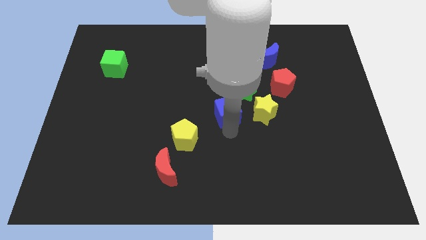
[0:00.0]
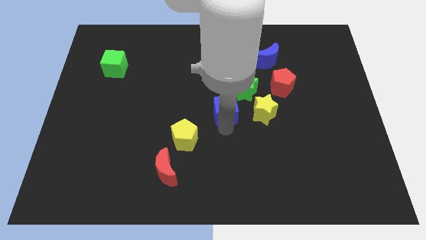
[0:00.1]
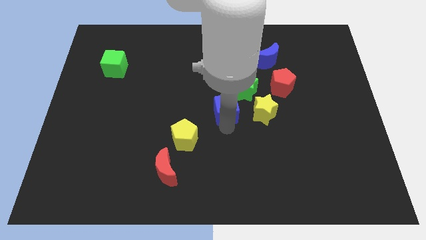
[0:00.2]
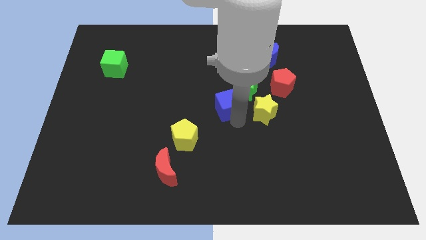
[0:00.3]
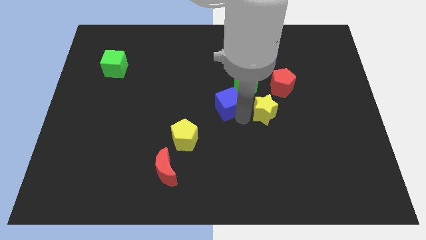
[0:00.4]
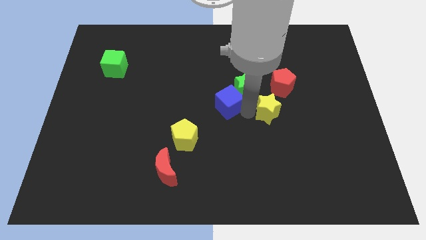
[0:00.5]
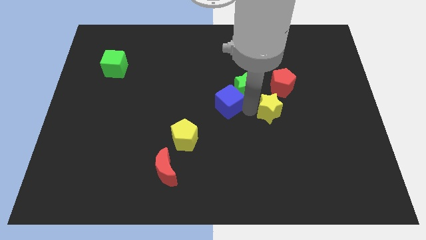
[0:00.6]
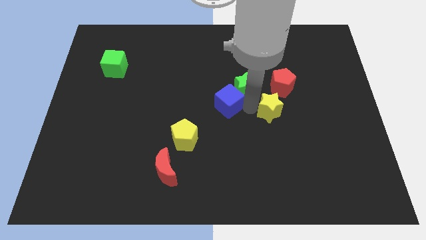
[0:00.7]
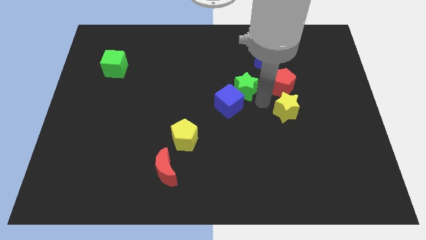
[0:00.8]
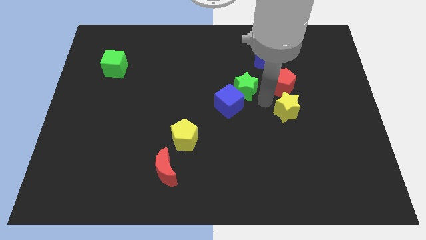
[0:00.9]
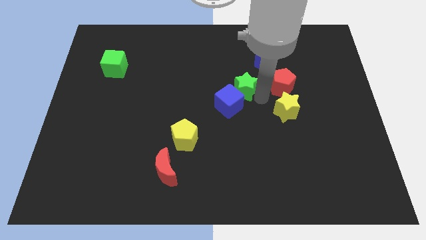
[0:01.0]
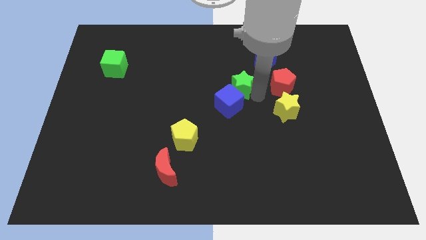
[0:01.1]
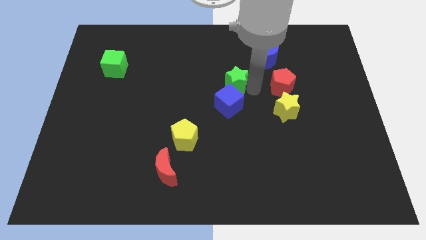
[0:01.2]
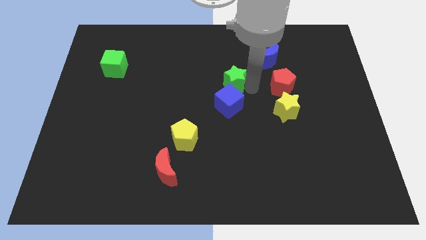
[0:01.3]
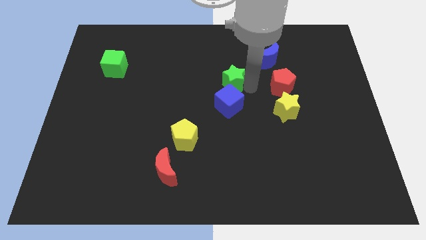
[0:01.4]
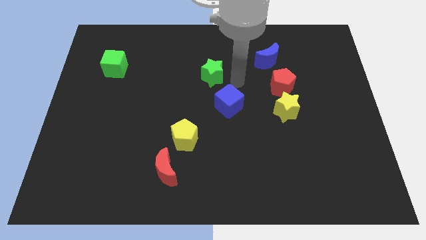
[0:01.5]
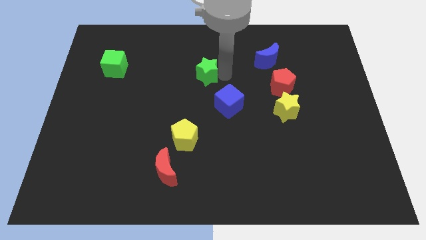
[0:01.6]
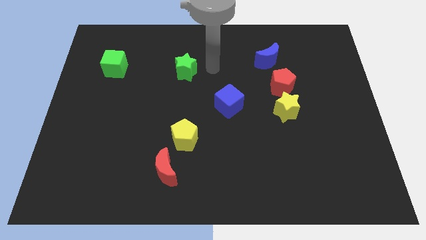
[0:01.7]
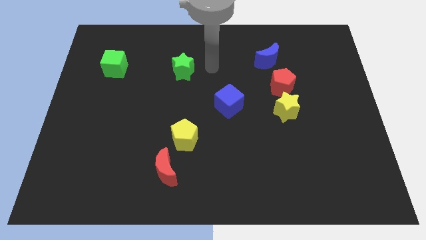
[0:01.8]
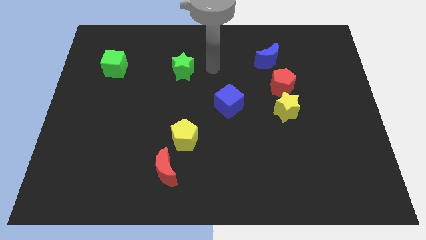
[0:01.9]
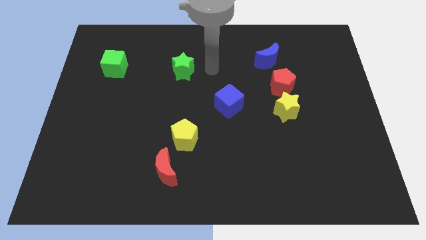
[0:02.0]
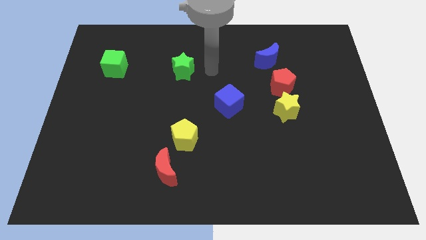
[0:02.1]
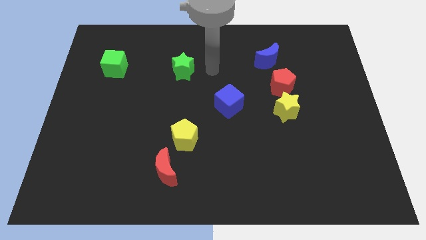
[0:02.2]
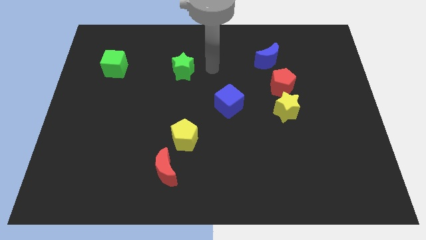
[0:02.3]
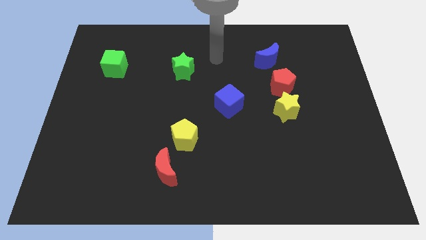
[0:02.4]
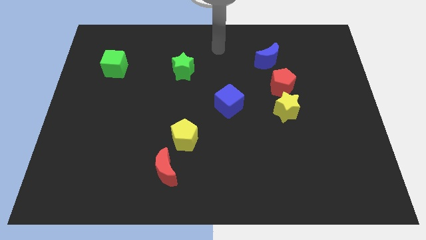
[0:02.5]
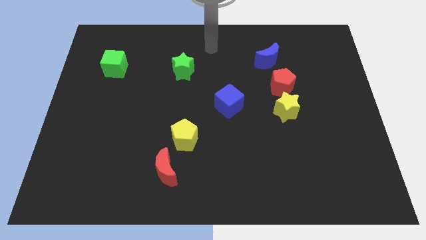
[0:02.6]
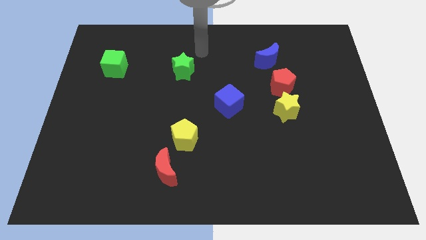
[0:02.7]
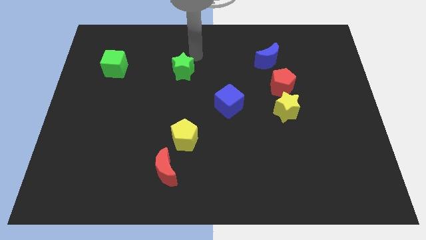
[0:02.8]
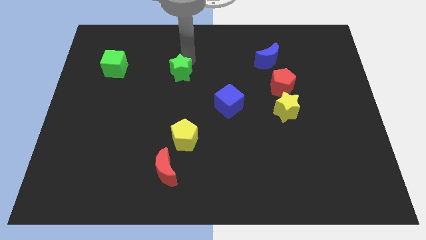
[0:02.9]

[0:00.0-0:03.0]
move the green star towards the right side of the green cube

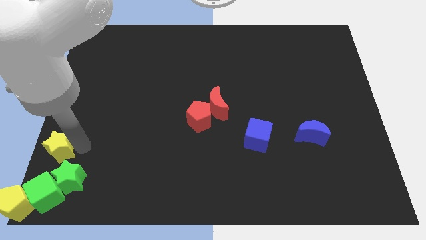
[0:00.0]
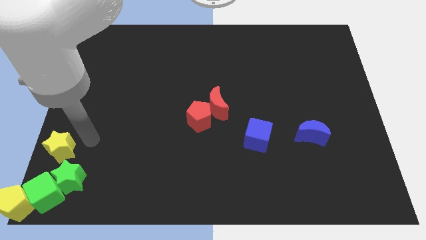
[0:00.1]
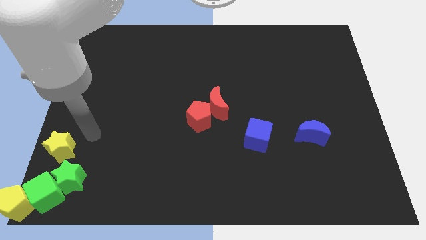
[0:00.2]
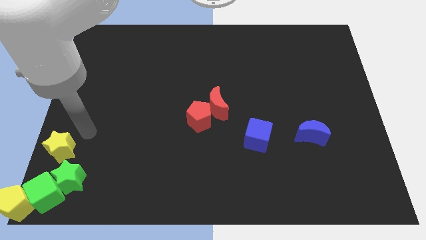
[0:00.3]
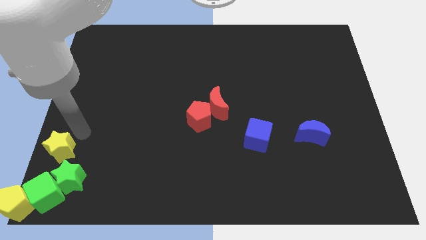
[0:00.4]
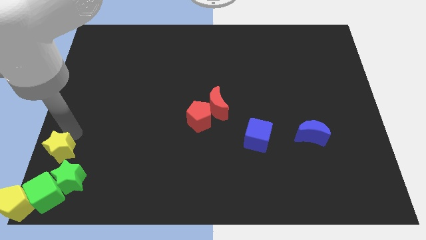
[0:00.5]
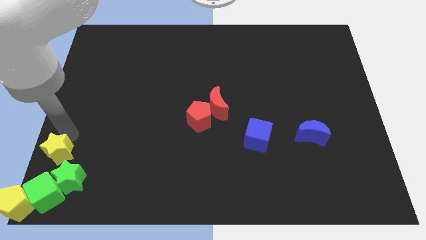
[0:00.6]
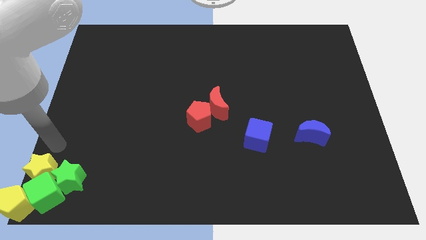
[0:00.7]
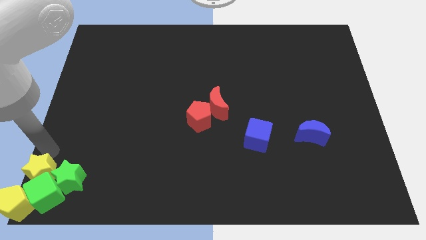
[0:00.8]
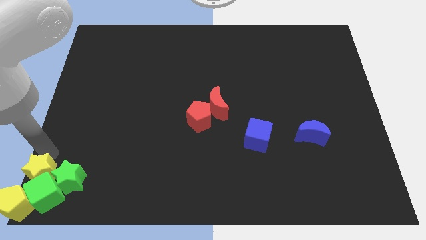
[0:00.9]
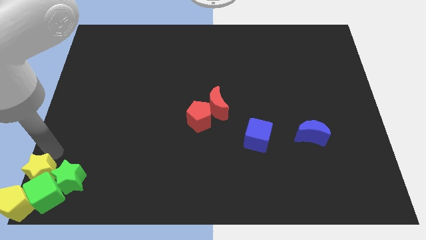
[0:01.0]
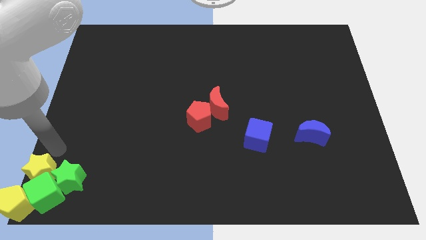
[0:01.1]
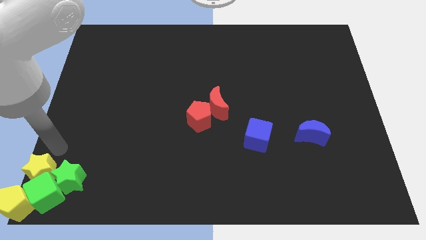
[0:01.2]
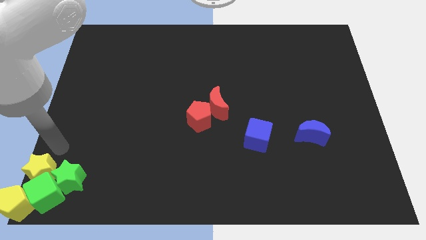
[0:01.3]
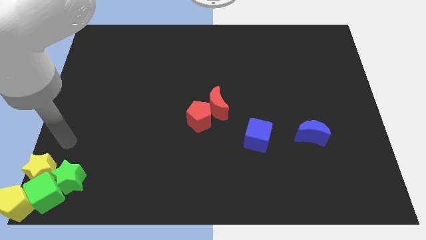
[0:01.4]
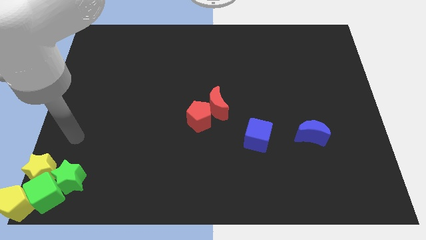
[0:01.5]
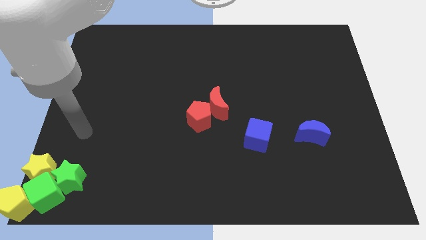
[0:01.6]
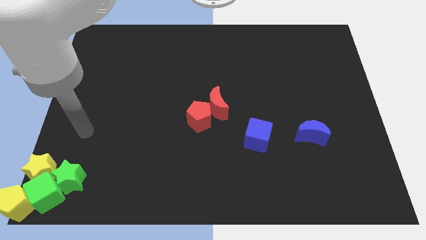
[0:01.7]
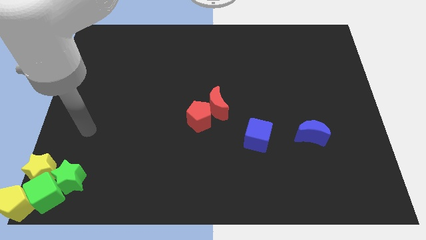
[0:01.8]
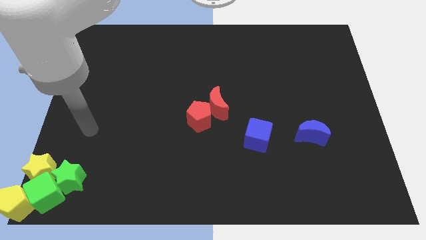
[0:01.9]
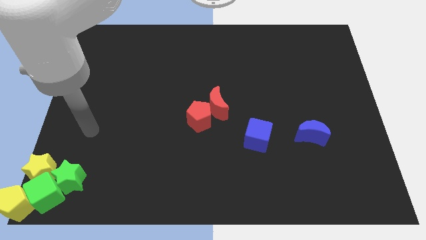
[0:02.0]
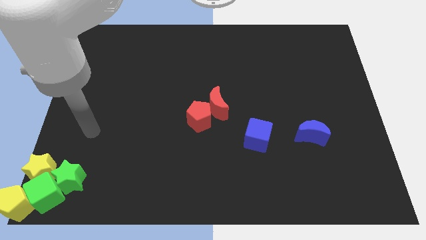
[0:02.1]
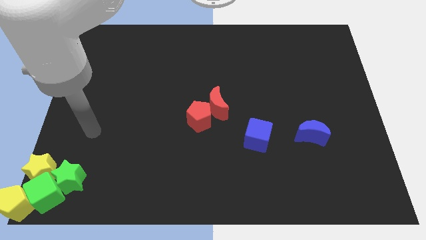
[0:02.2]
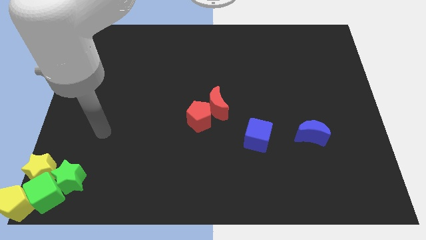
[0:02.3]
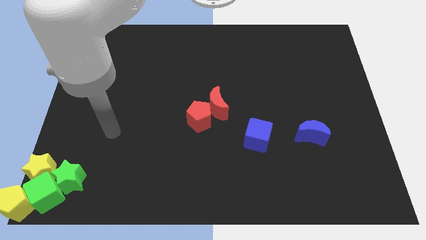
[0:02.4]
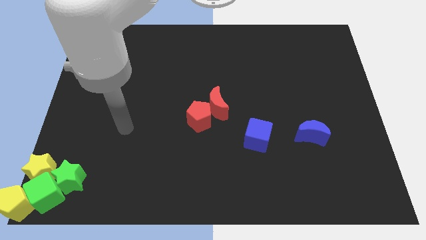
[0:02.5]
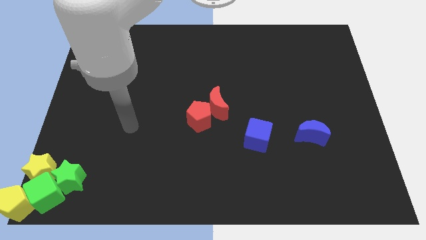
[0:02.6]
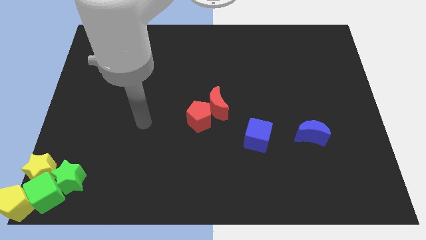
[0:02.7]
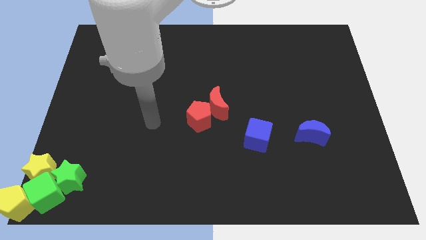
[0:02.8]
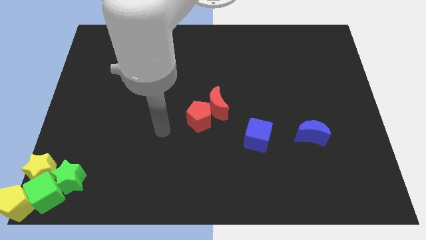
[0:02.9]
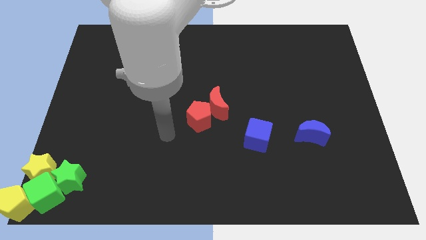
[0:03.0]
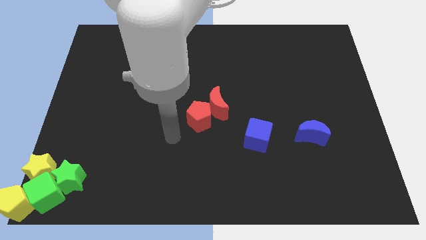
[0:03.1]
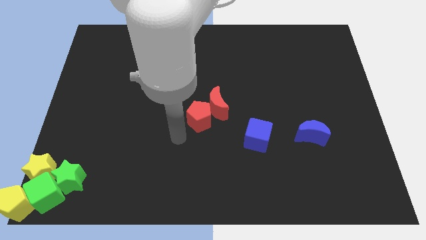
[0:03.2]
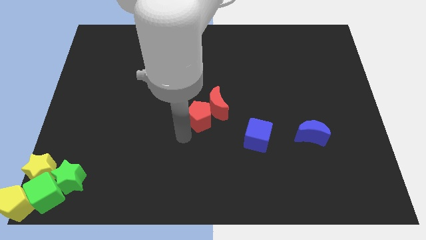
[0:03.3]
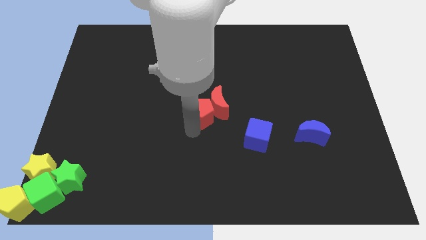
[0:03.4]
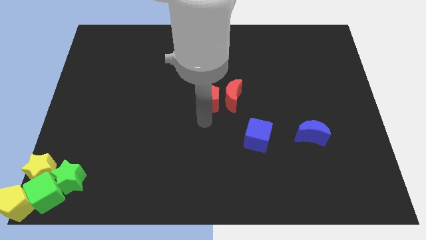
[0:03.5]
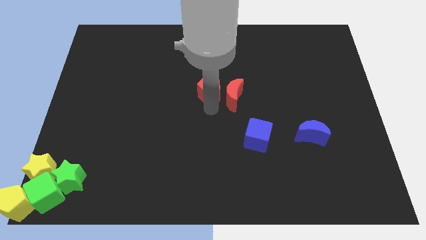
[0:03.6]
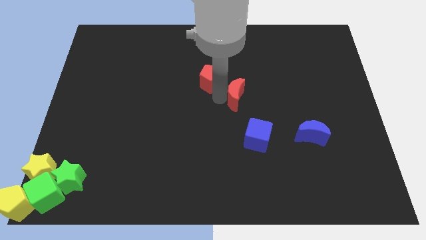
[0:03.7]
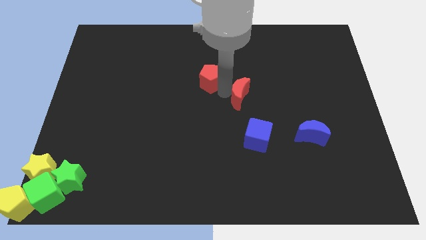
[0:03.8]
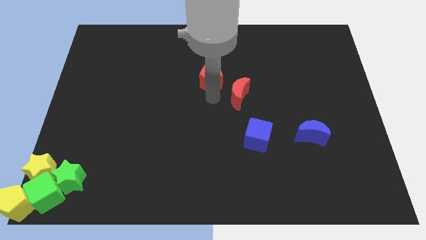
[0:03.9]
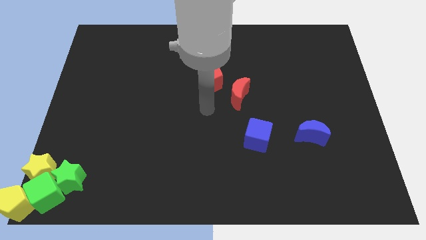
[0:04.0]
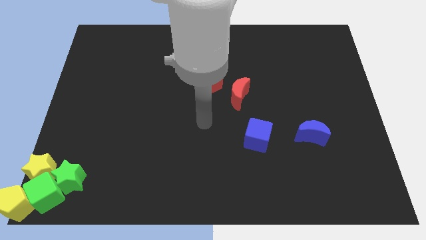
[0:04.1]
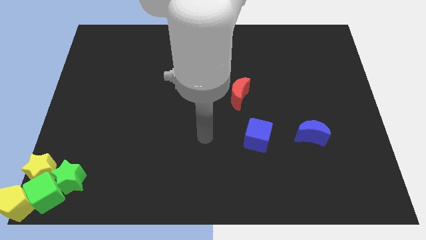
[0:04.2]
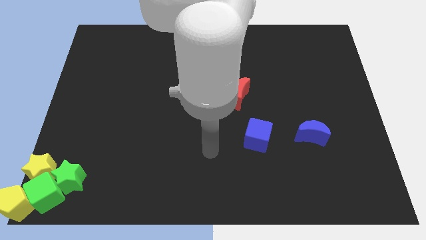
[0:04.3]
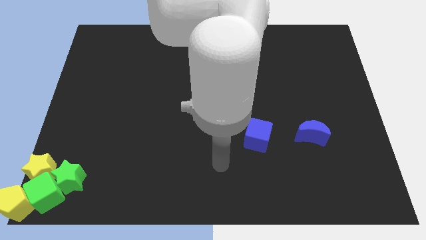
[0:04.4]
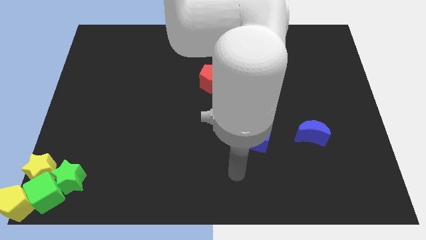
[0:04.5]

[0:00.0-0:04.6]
slightly move red pentagon towards the top side of the board

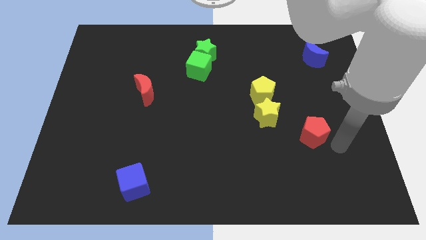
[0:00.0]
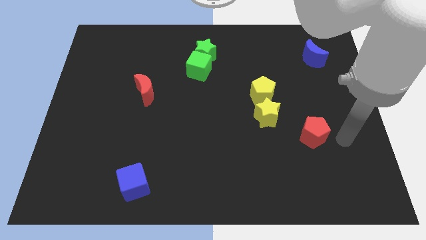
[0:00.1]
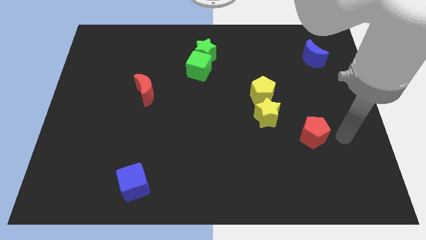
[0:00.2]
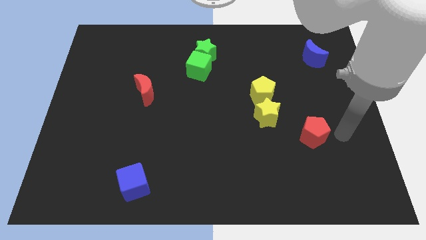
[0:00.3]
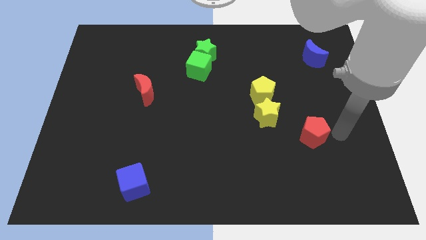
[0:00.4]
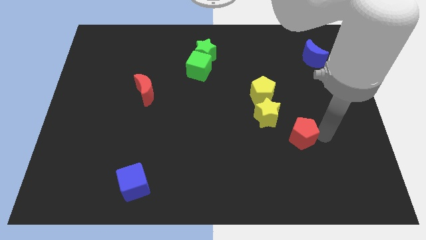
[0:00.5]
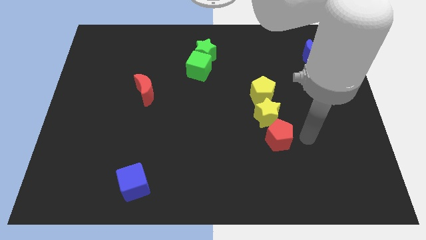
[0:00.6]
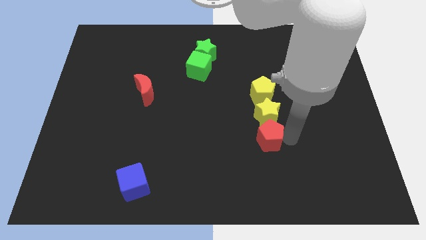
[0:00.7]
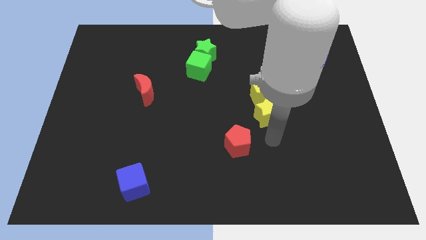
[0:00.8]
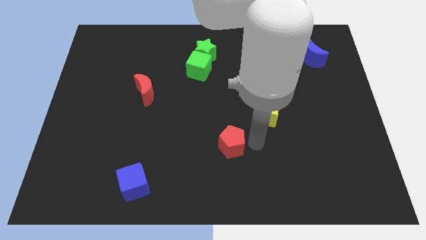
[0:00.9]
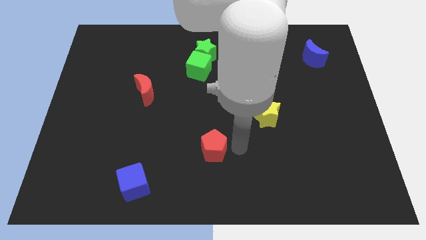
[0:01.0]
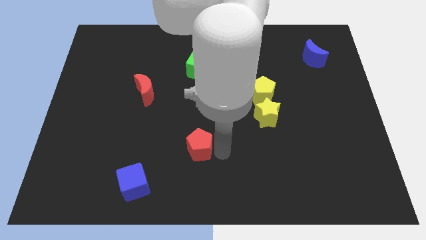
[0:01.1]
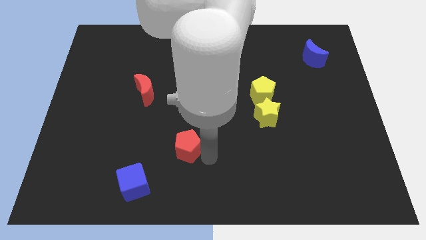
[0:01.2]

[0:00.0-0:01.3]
move the red pentagon below the yellow star
